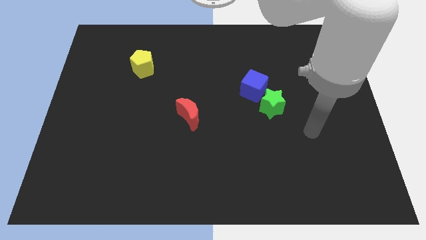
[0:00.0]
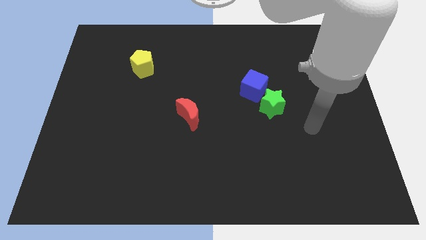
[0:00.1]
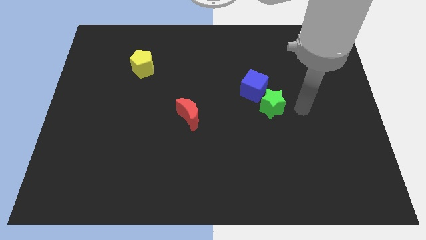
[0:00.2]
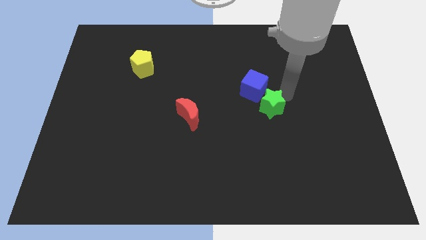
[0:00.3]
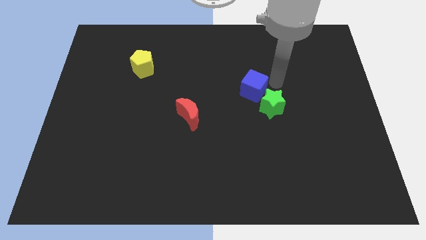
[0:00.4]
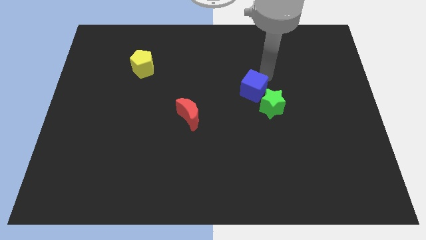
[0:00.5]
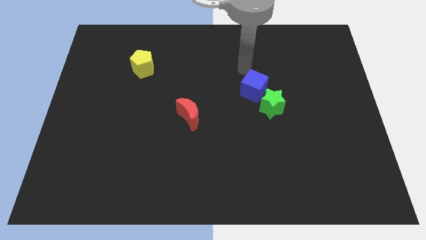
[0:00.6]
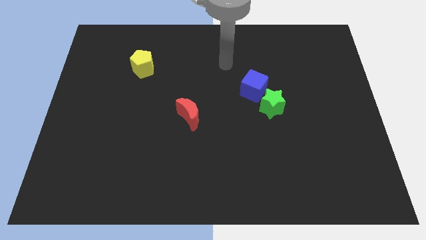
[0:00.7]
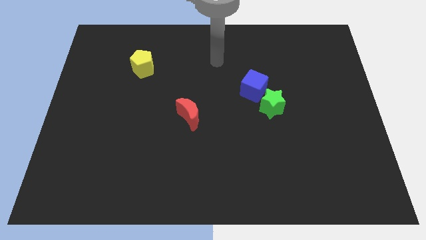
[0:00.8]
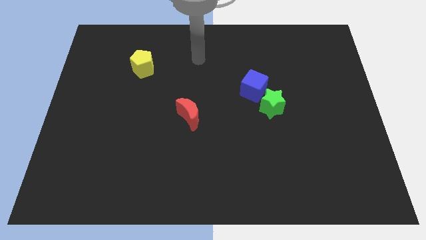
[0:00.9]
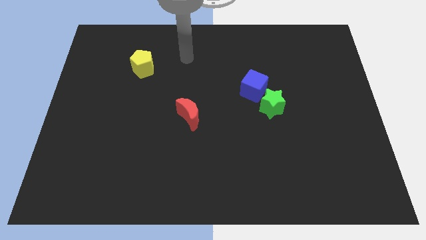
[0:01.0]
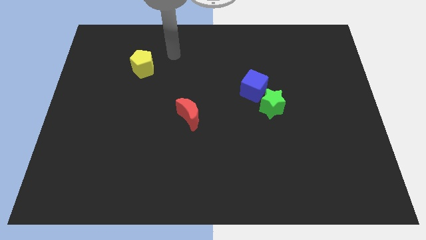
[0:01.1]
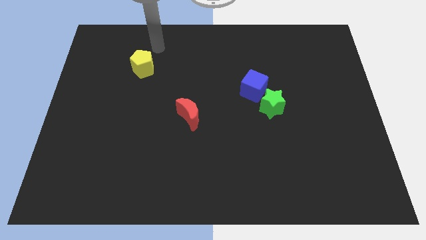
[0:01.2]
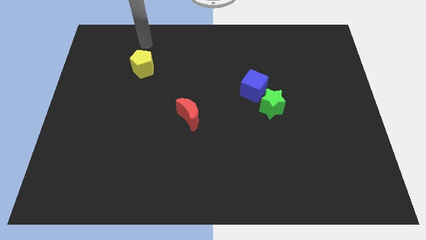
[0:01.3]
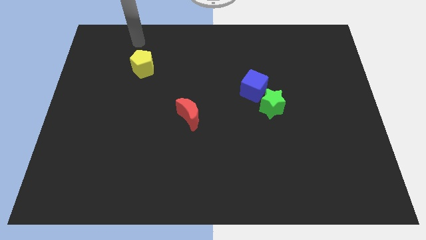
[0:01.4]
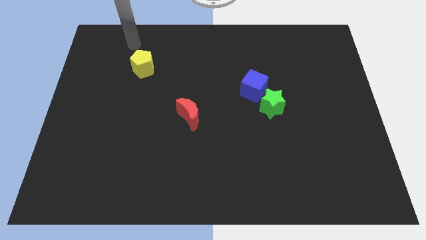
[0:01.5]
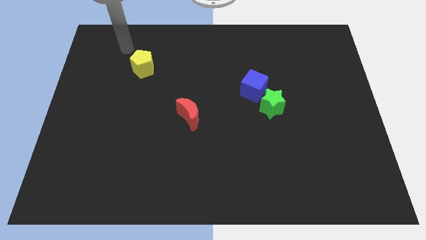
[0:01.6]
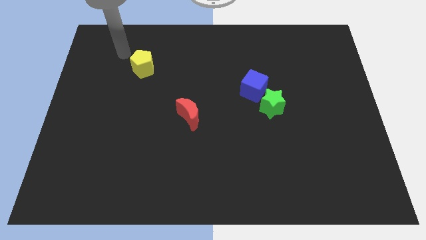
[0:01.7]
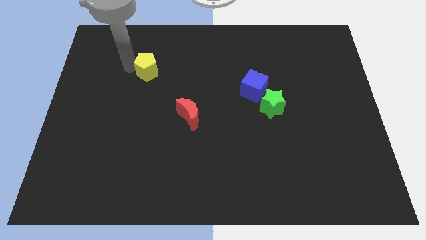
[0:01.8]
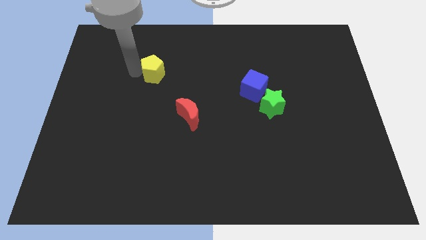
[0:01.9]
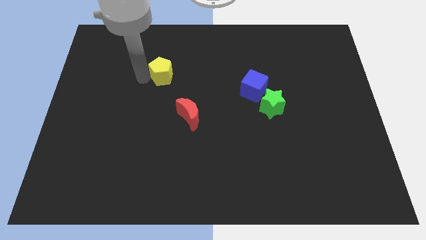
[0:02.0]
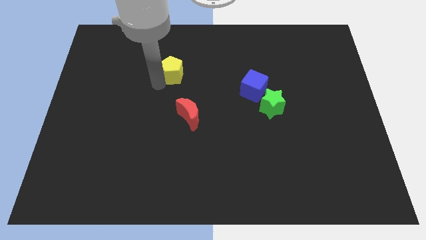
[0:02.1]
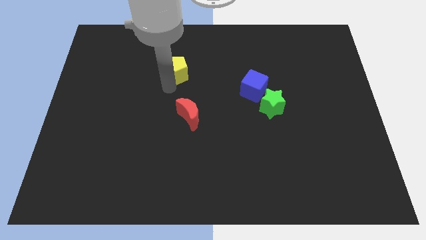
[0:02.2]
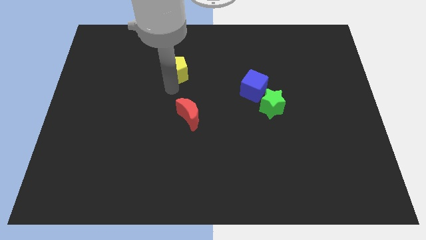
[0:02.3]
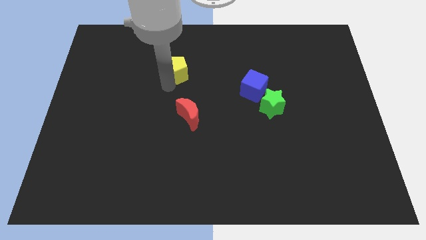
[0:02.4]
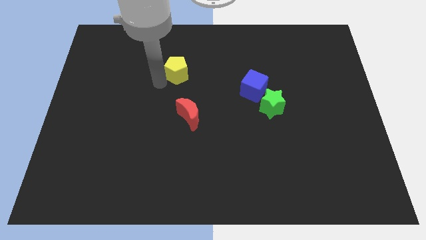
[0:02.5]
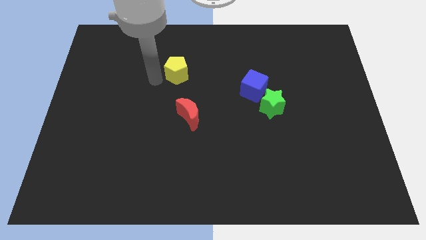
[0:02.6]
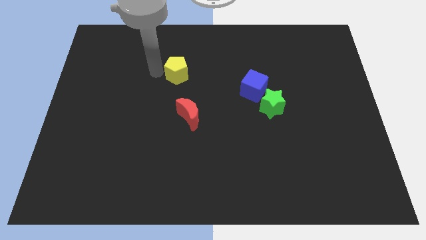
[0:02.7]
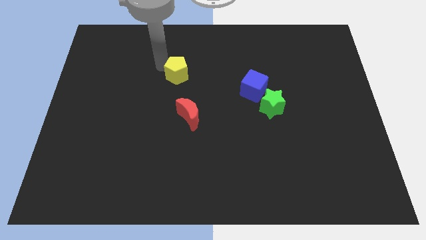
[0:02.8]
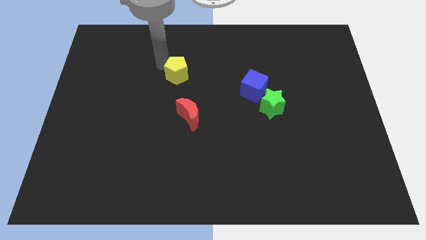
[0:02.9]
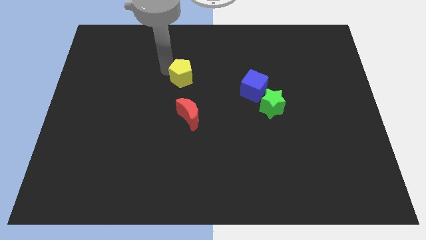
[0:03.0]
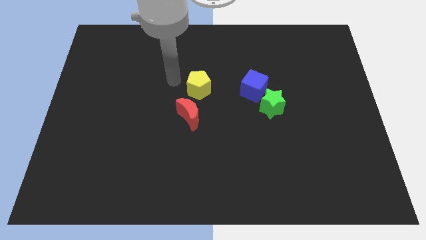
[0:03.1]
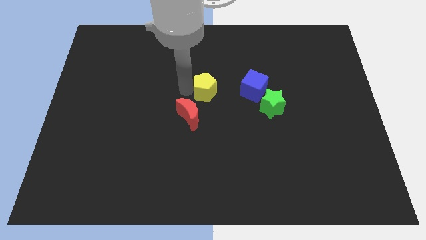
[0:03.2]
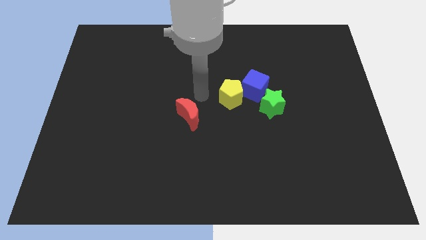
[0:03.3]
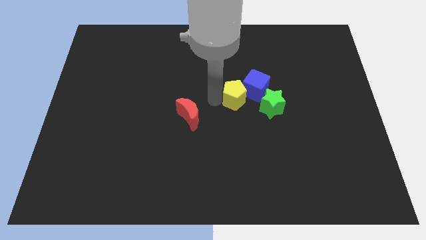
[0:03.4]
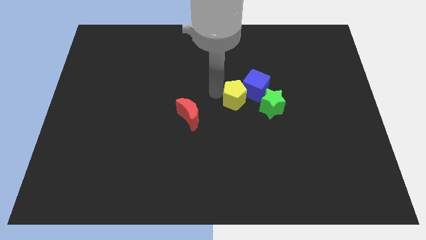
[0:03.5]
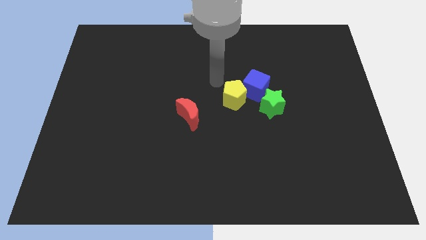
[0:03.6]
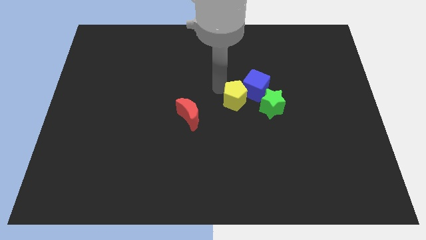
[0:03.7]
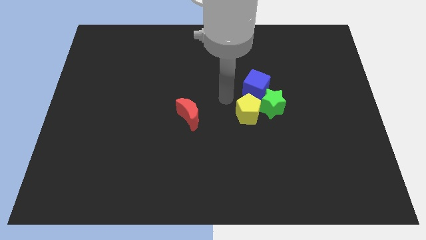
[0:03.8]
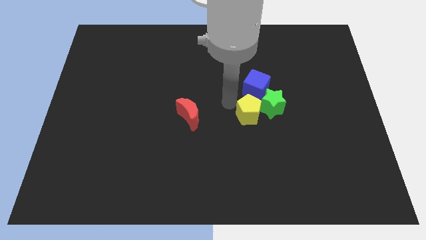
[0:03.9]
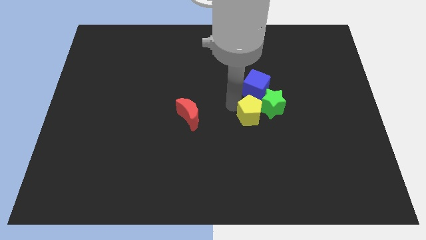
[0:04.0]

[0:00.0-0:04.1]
push the yellow block next to the green block

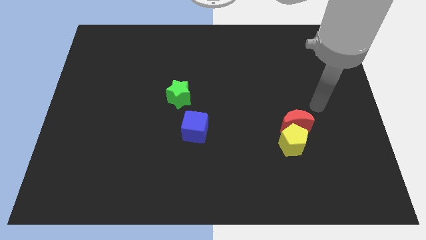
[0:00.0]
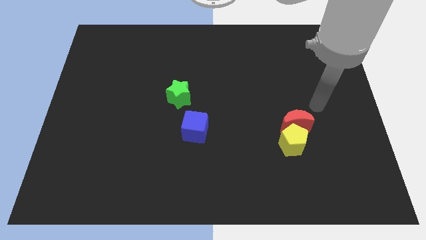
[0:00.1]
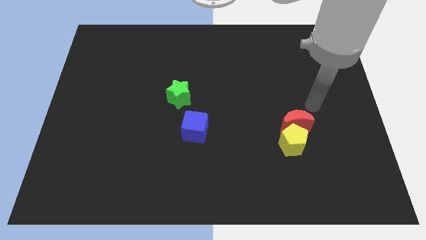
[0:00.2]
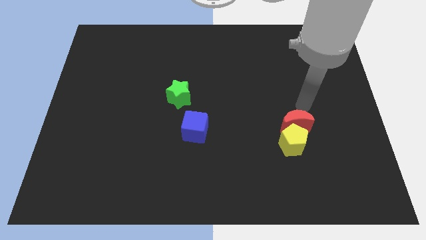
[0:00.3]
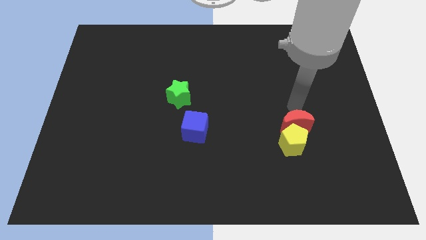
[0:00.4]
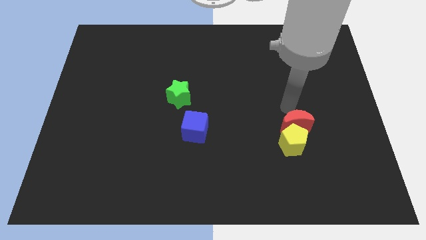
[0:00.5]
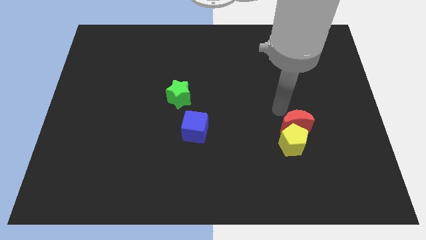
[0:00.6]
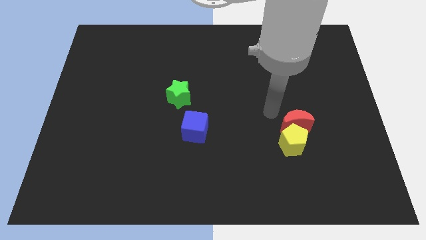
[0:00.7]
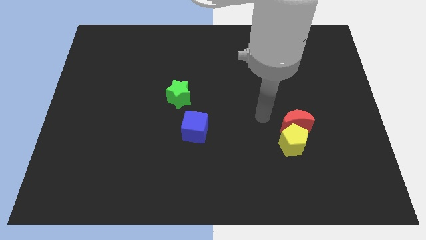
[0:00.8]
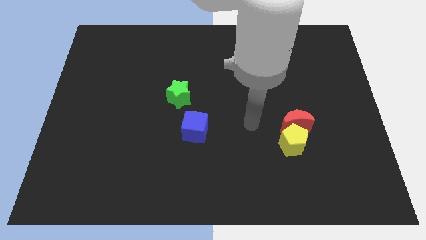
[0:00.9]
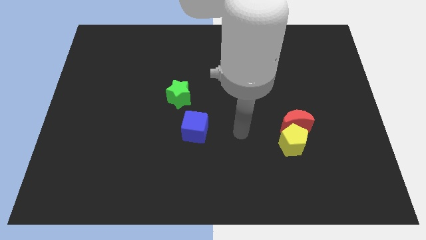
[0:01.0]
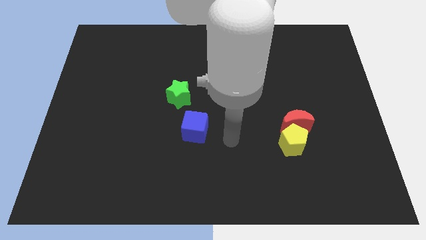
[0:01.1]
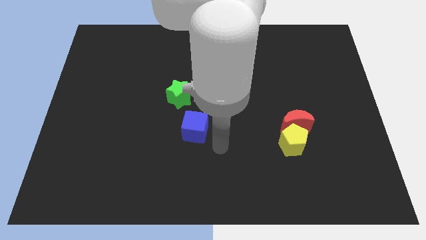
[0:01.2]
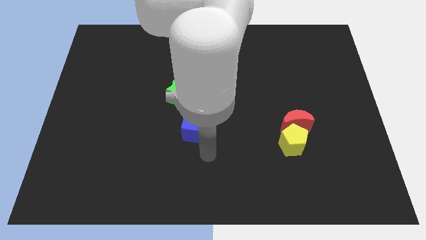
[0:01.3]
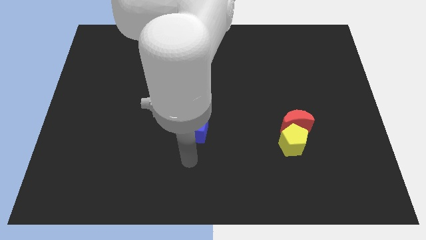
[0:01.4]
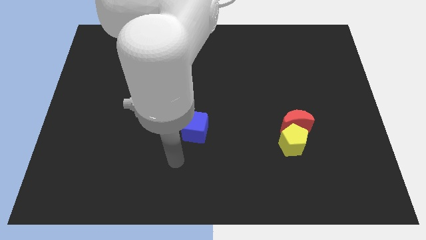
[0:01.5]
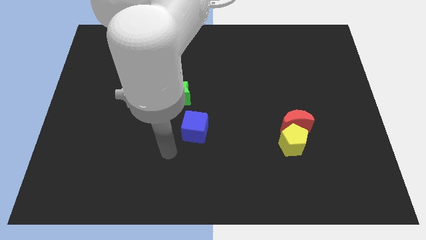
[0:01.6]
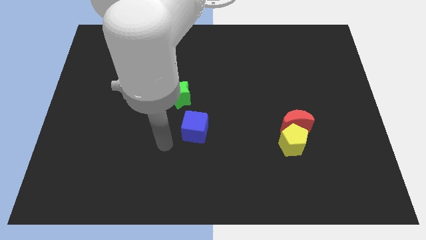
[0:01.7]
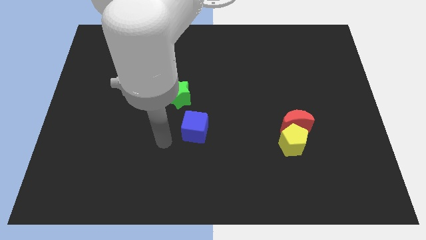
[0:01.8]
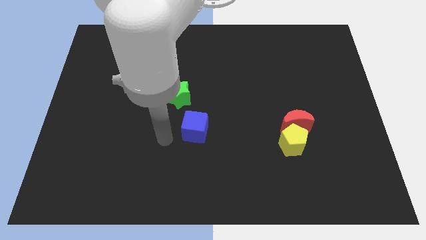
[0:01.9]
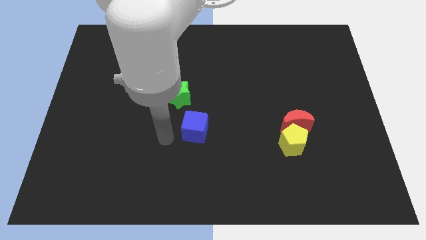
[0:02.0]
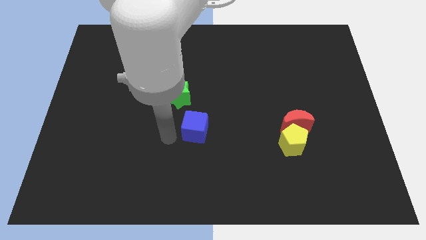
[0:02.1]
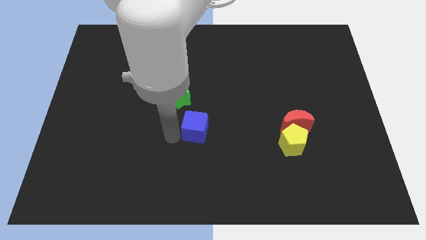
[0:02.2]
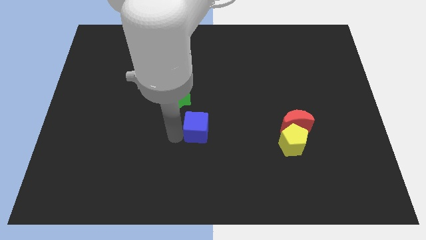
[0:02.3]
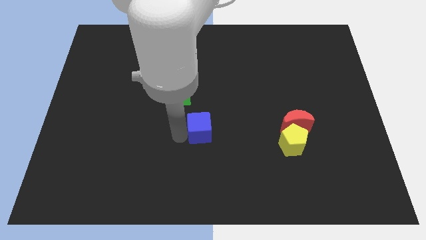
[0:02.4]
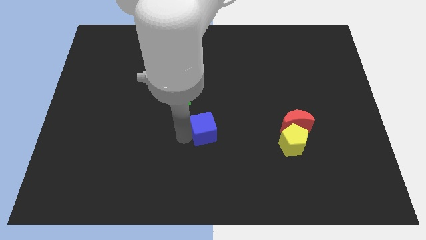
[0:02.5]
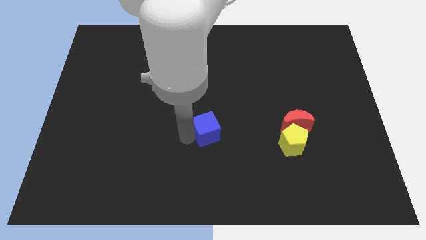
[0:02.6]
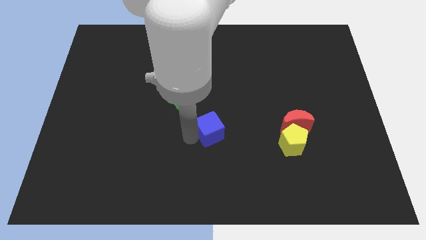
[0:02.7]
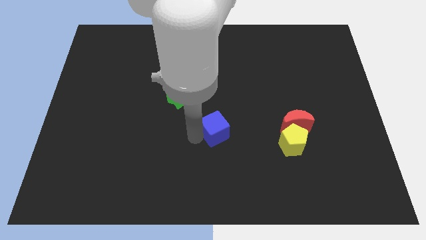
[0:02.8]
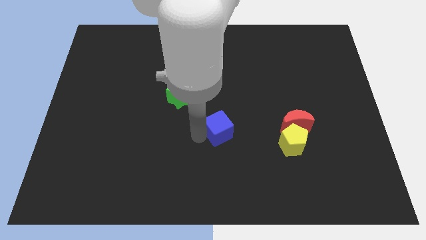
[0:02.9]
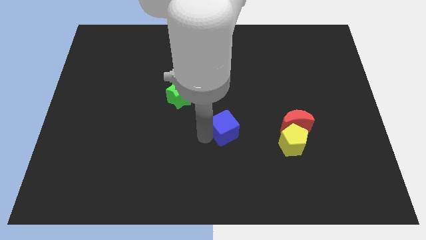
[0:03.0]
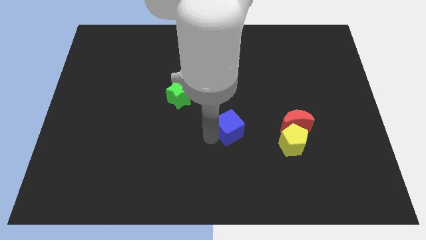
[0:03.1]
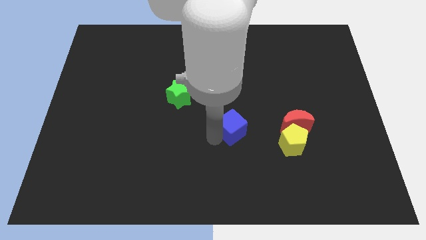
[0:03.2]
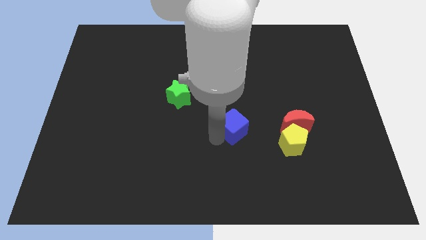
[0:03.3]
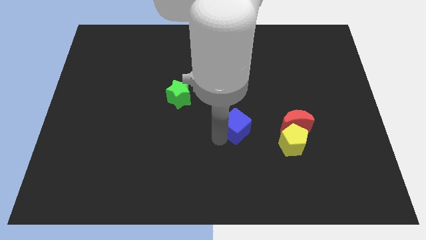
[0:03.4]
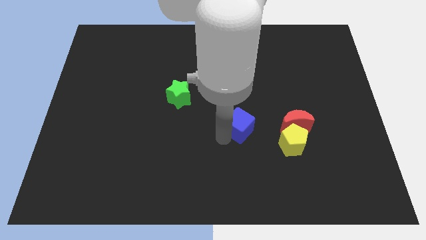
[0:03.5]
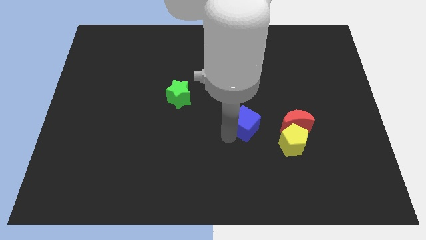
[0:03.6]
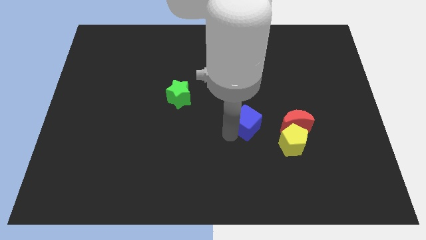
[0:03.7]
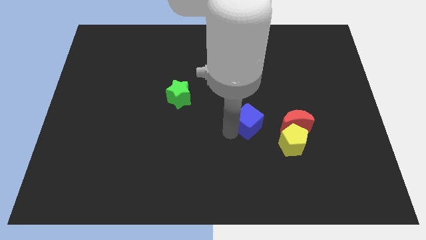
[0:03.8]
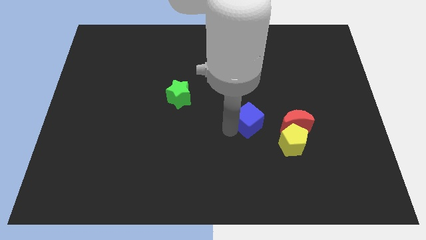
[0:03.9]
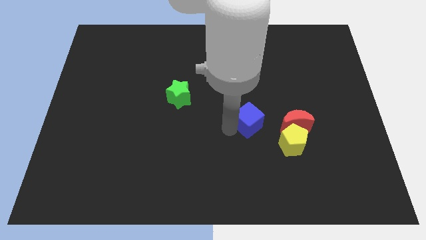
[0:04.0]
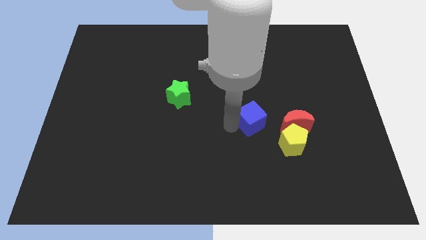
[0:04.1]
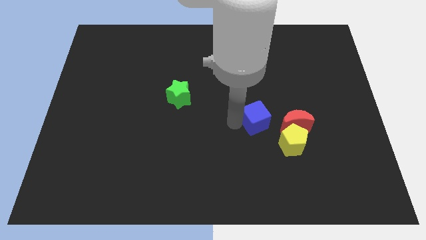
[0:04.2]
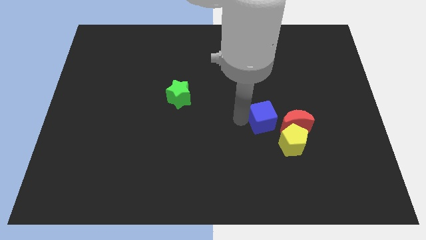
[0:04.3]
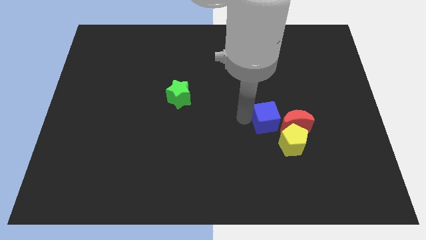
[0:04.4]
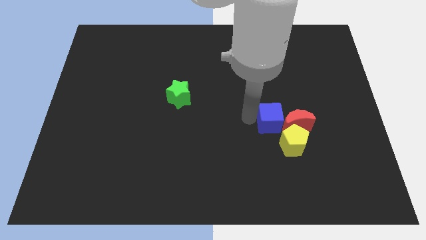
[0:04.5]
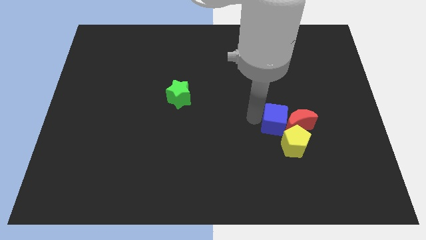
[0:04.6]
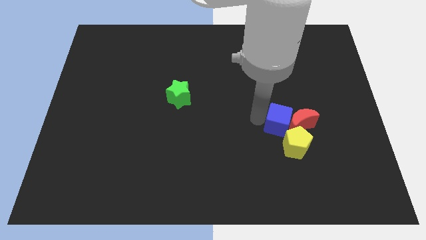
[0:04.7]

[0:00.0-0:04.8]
move the blue cube to the moon
